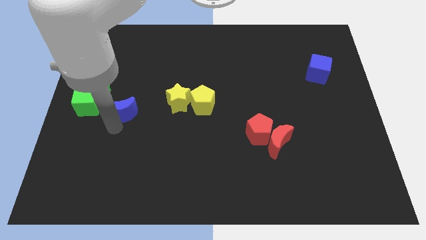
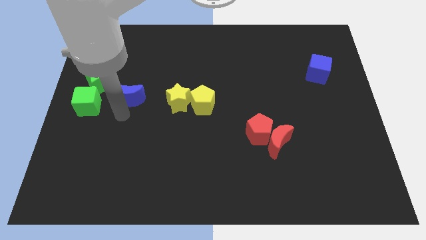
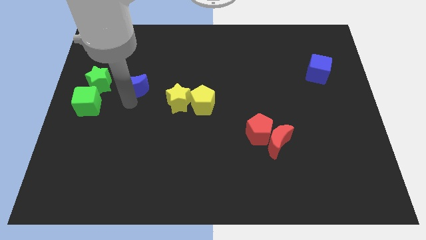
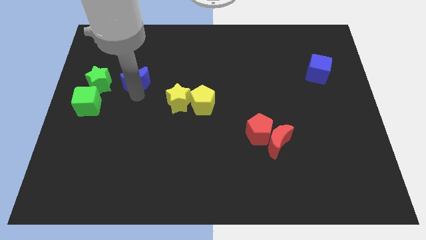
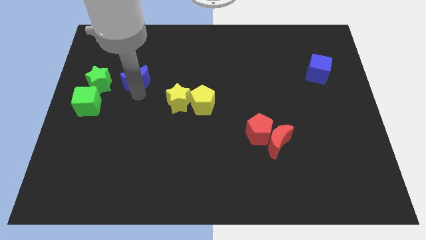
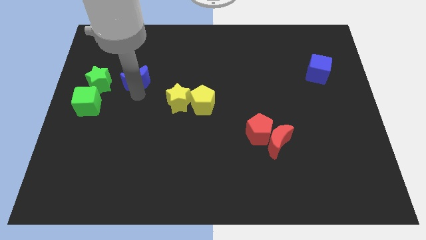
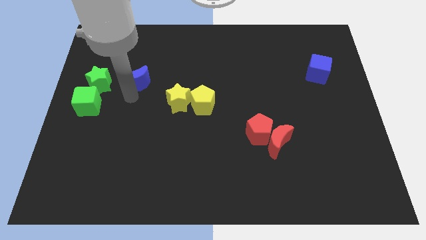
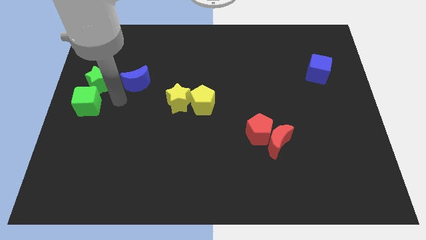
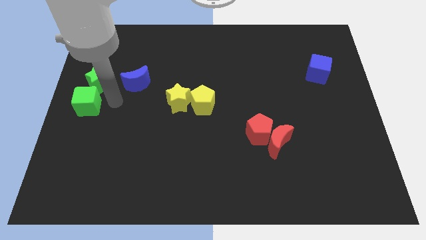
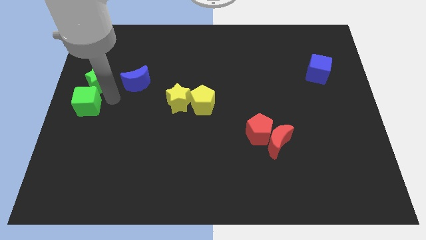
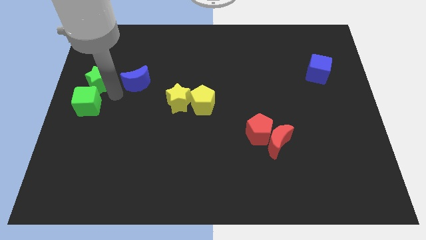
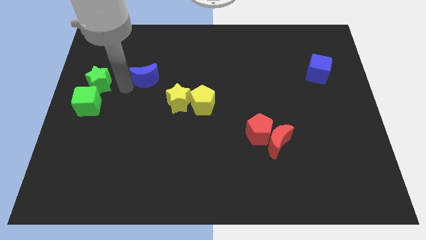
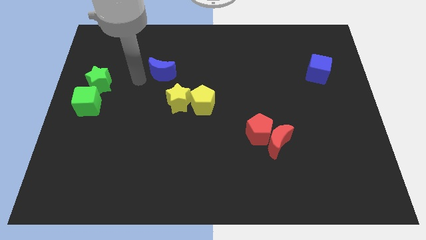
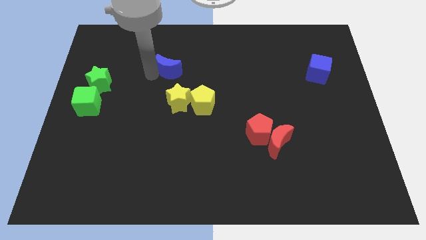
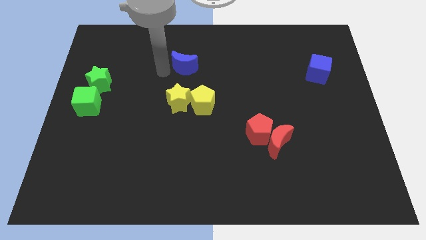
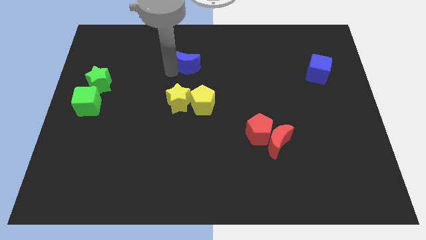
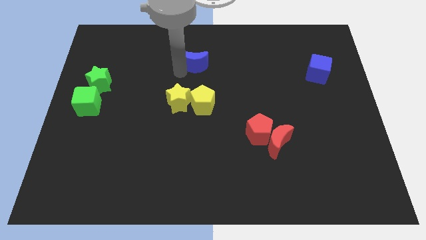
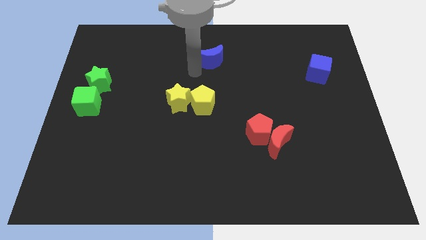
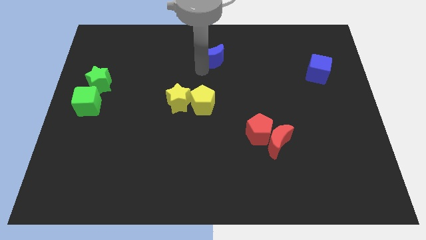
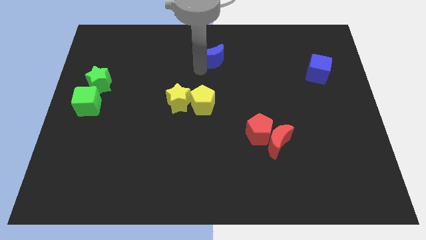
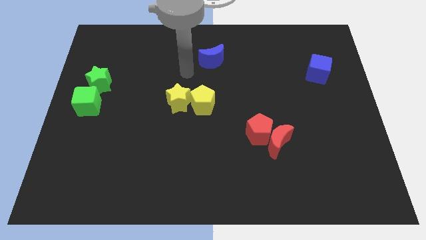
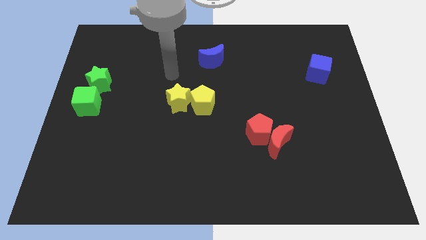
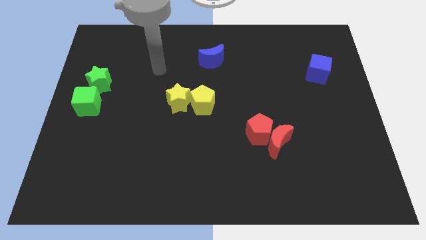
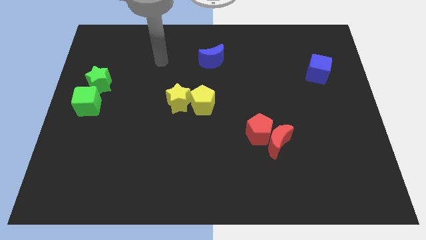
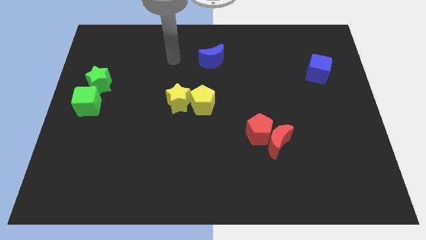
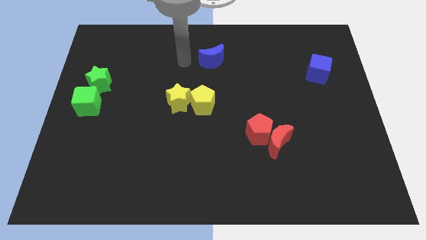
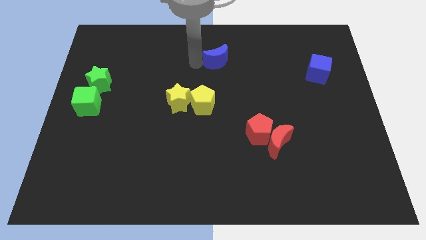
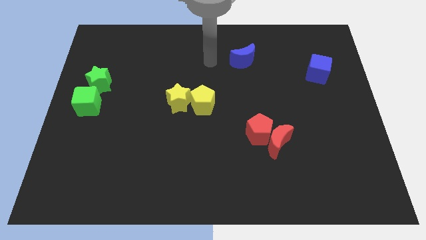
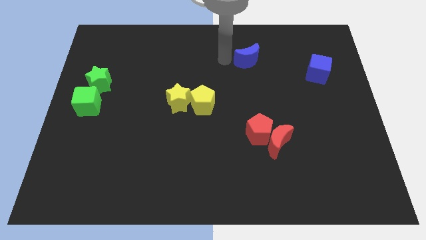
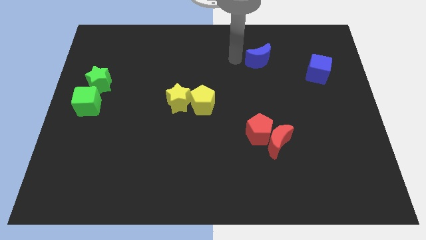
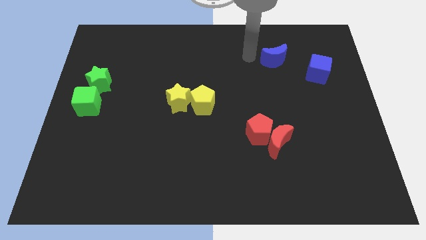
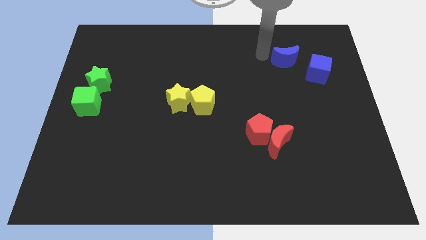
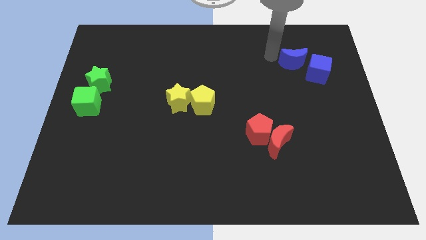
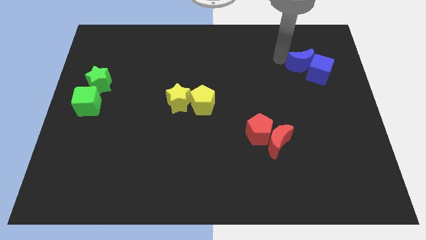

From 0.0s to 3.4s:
place the blue moon into the blue cube

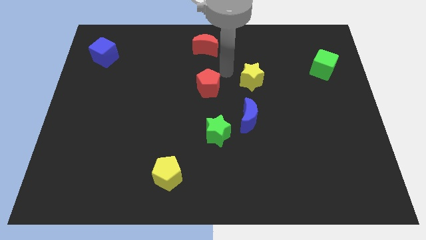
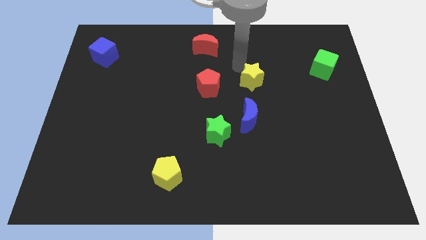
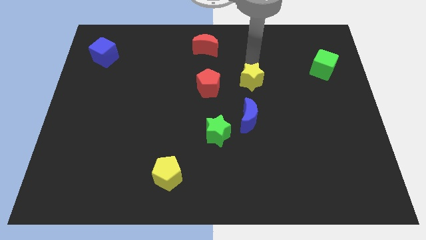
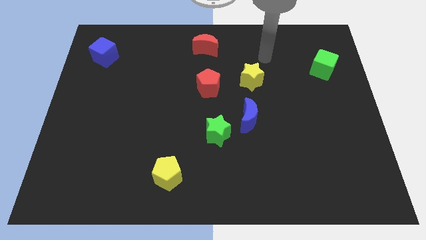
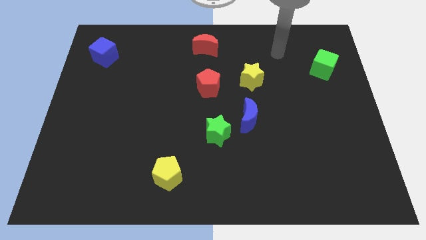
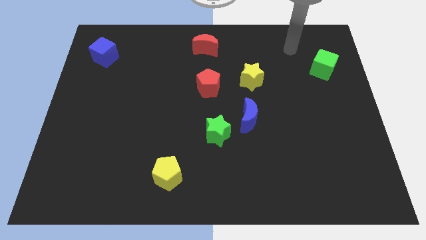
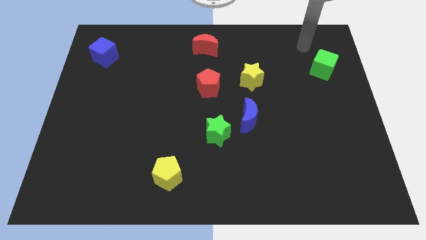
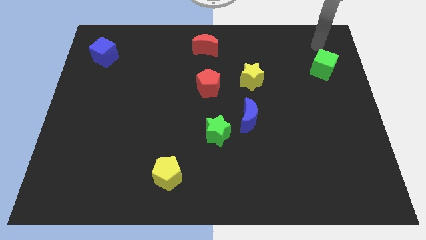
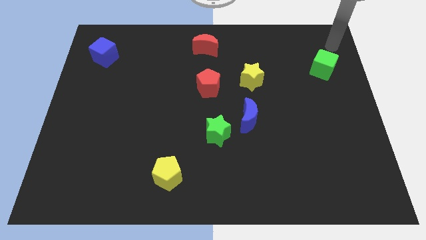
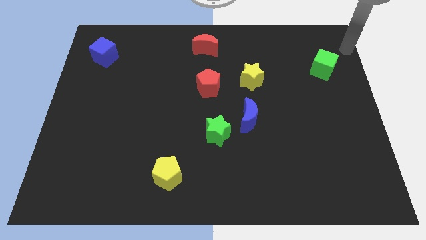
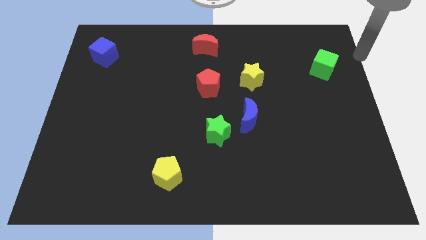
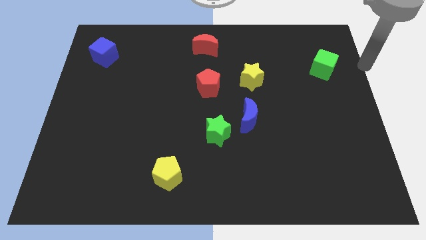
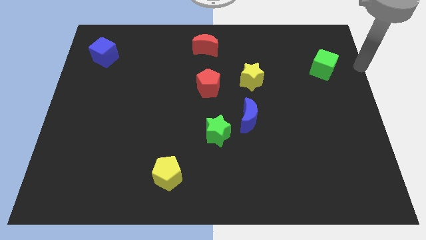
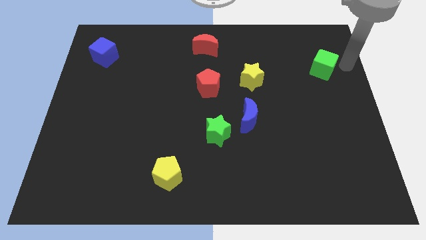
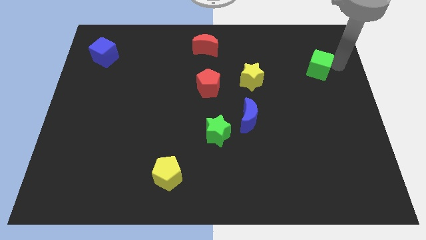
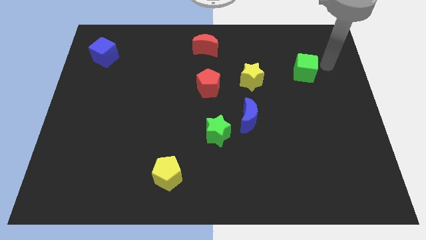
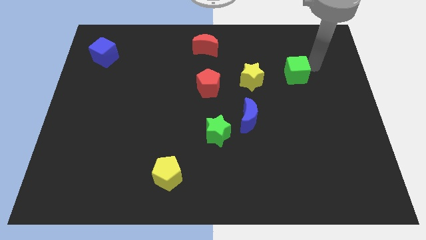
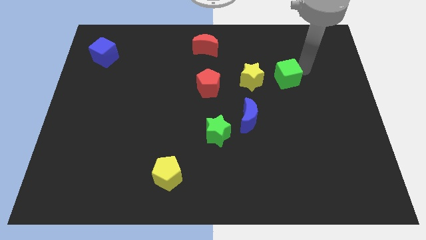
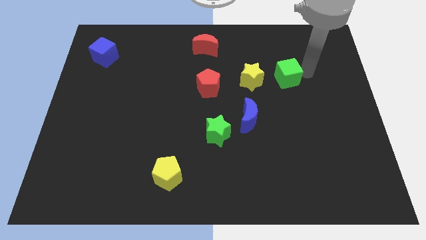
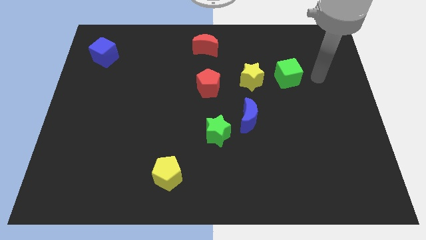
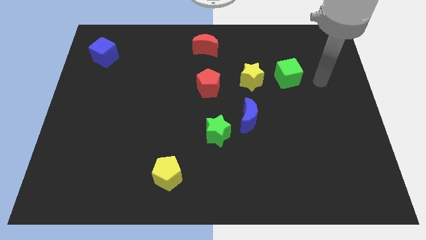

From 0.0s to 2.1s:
move green cube near to the yellow star

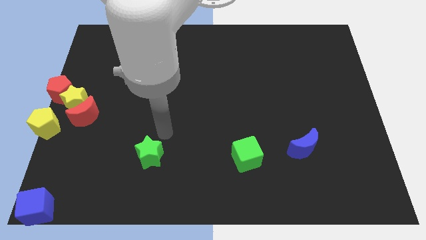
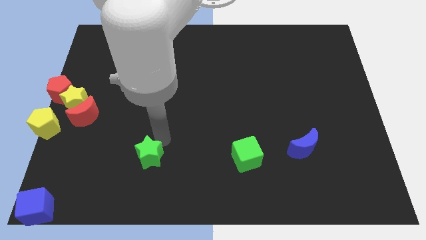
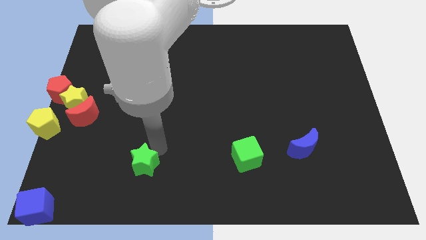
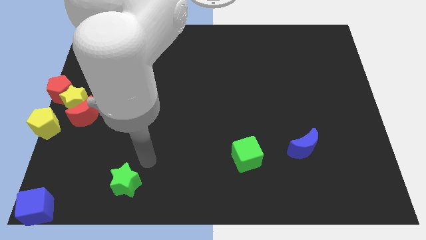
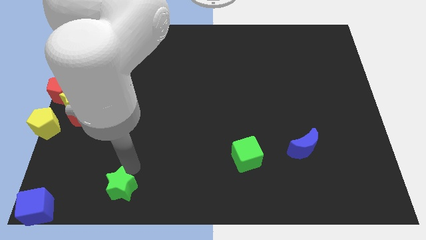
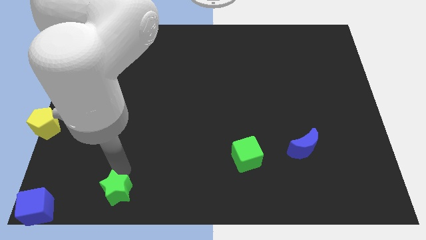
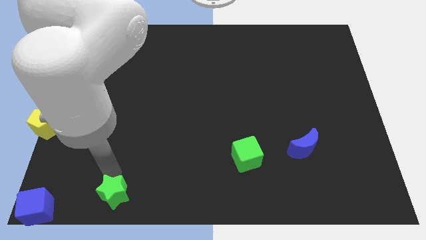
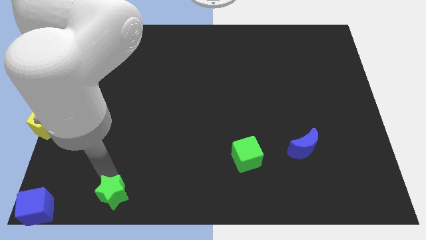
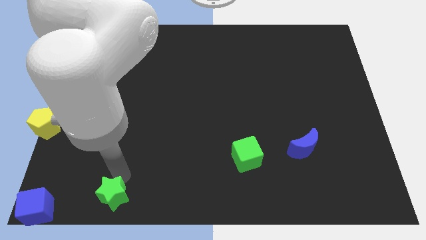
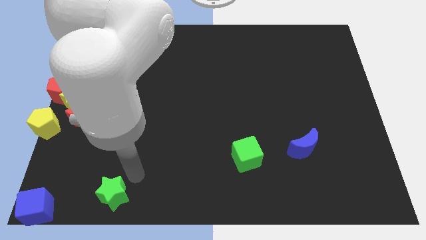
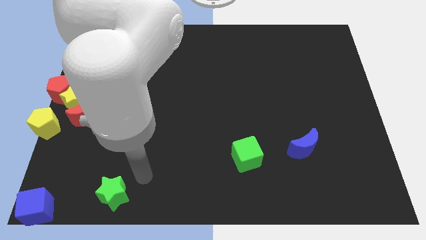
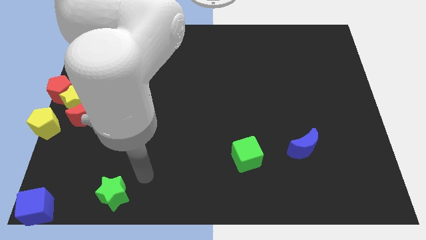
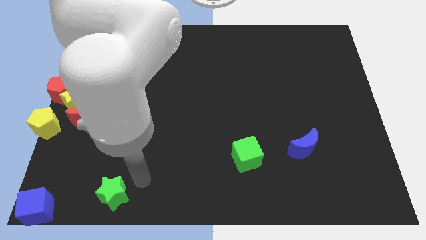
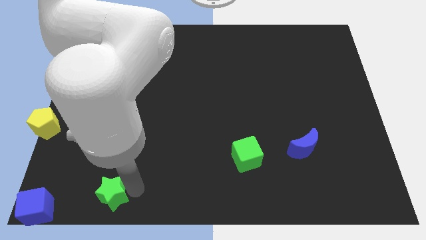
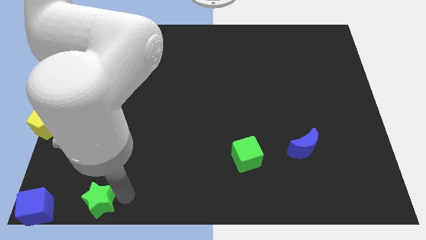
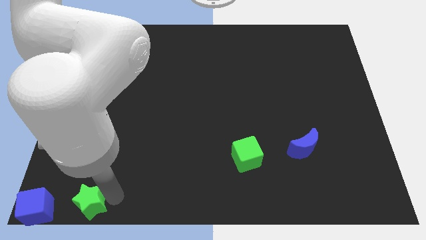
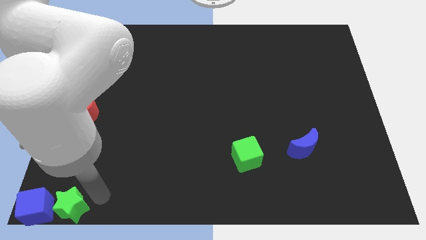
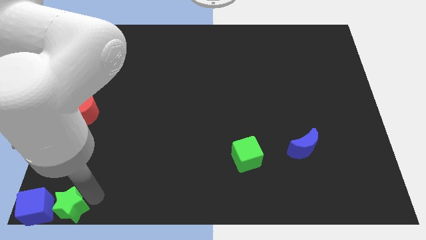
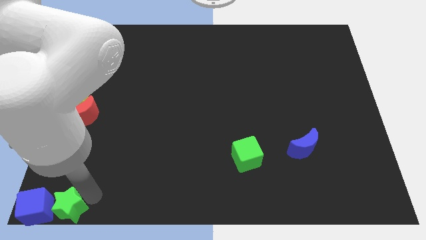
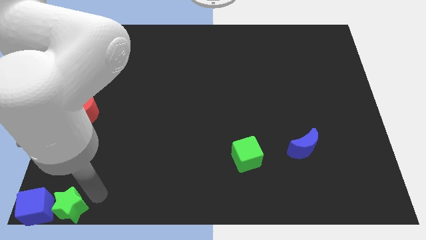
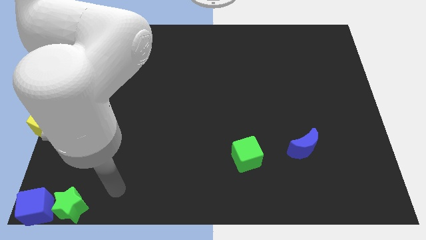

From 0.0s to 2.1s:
add green star to the right of blue cube

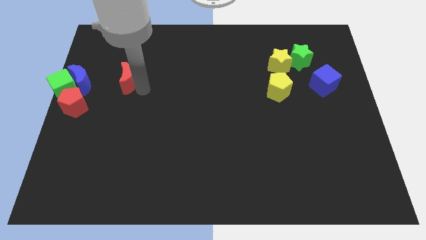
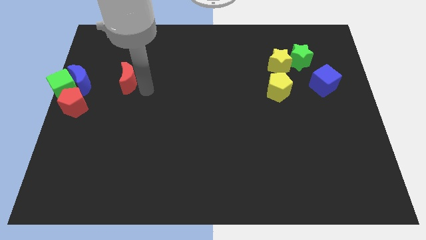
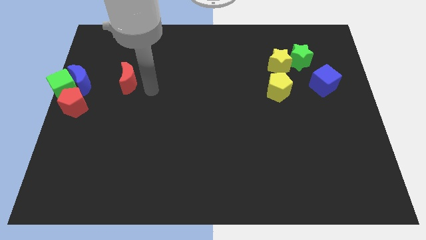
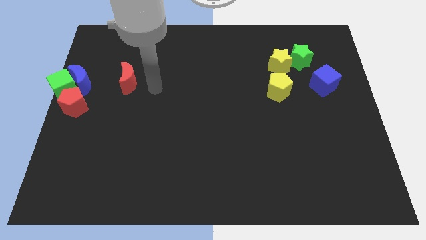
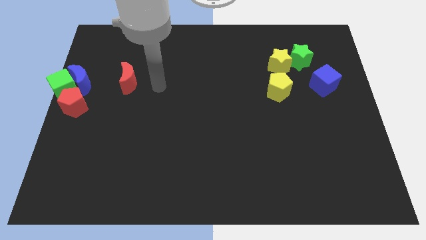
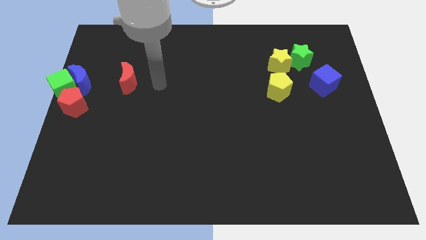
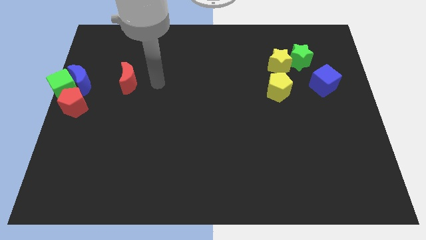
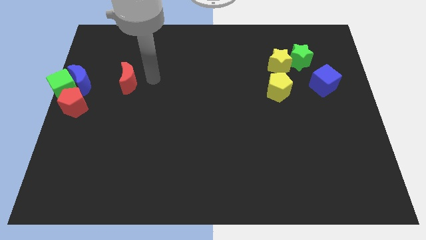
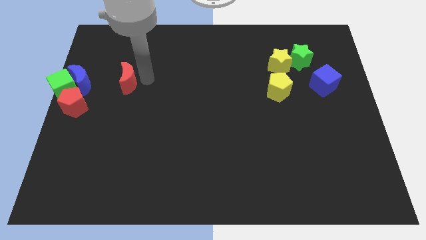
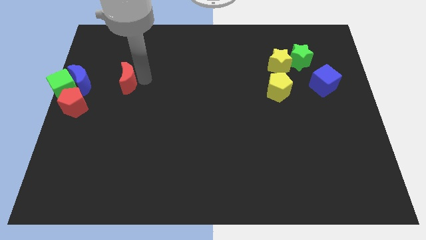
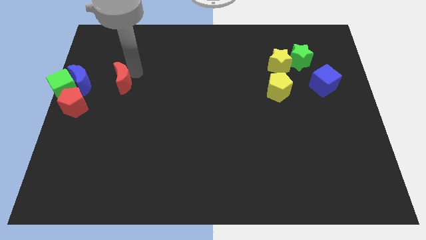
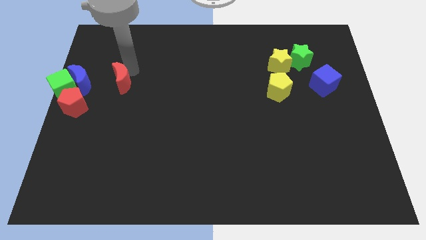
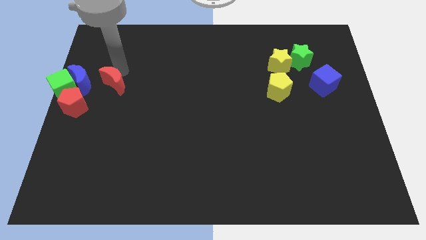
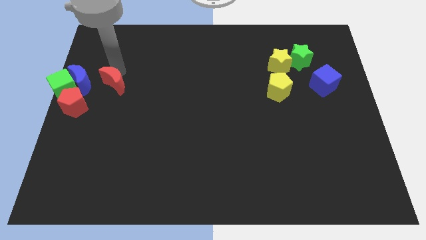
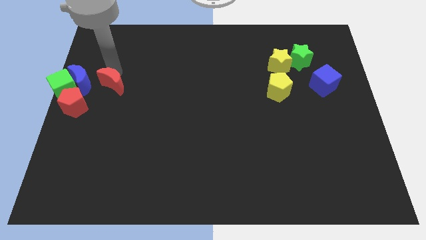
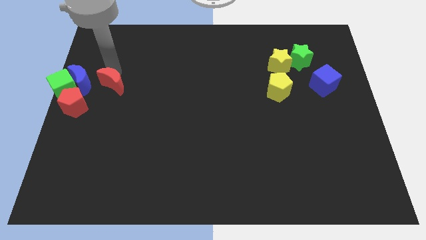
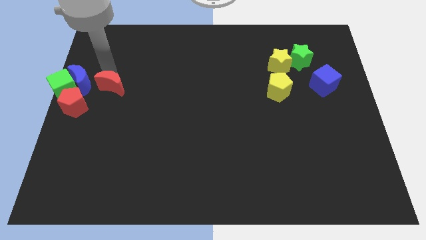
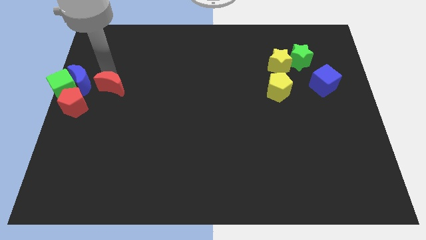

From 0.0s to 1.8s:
place the red moon to the right of blue moon
